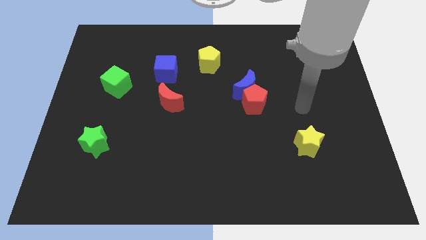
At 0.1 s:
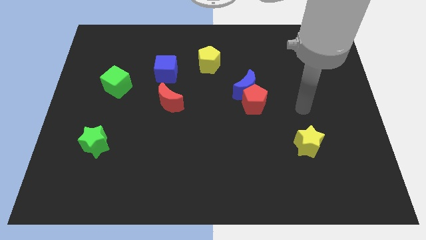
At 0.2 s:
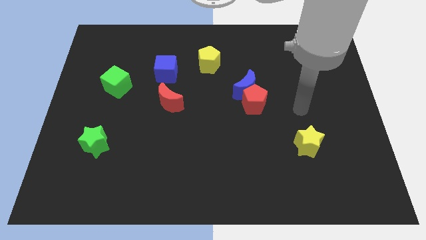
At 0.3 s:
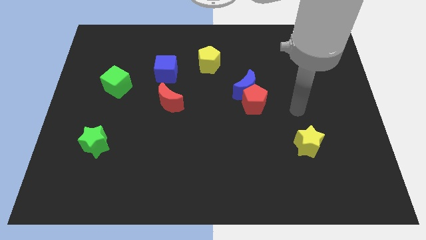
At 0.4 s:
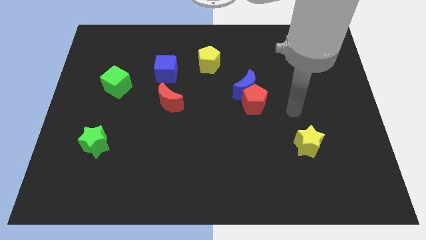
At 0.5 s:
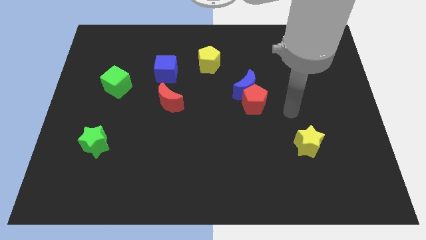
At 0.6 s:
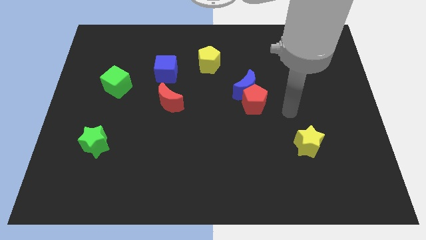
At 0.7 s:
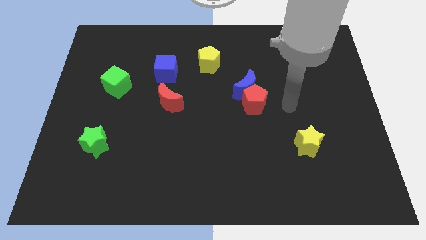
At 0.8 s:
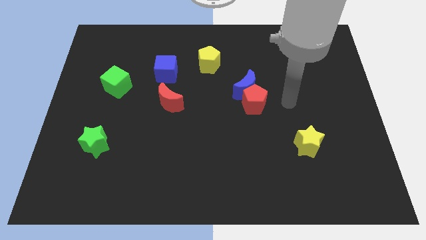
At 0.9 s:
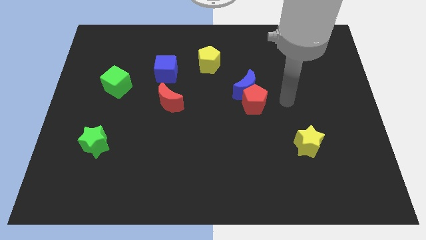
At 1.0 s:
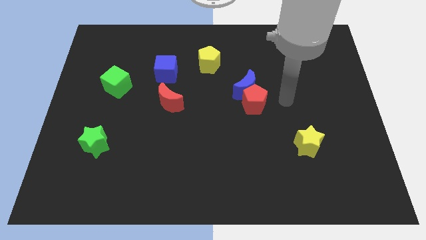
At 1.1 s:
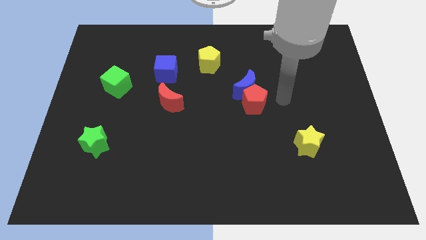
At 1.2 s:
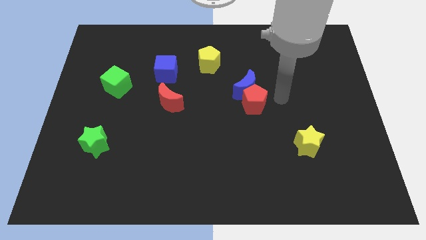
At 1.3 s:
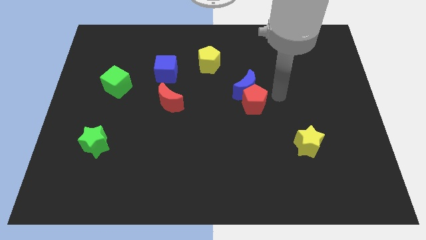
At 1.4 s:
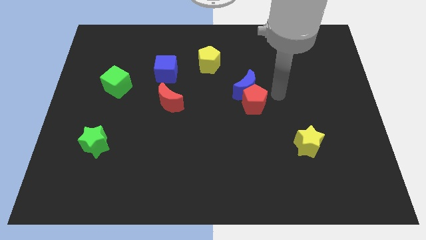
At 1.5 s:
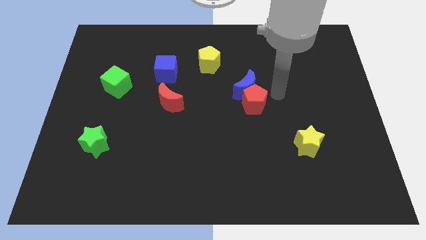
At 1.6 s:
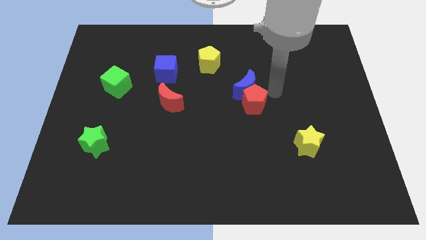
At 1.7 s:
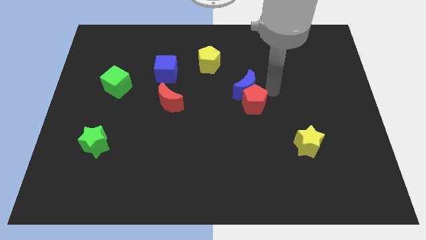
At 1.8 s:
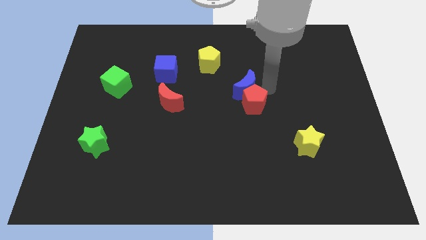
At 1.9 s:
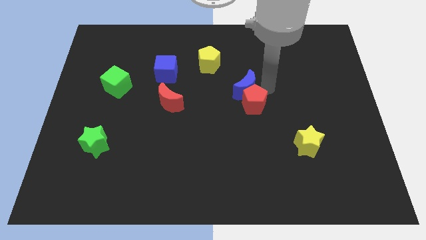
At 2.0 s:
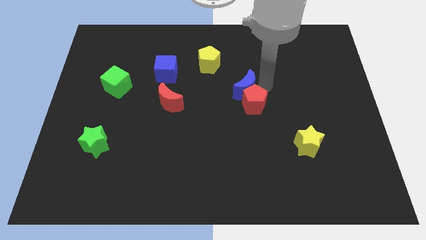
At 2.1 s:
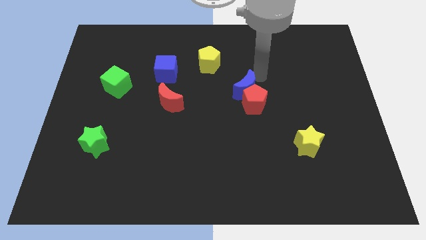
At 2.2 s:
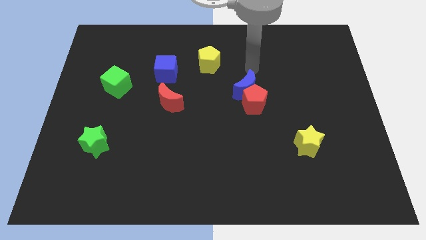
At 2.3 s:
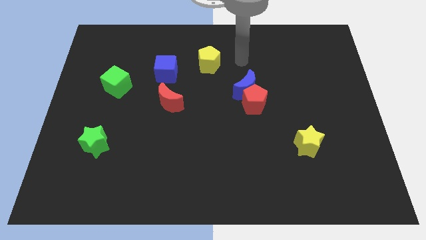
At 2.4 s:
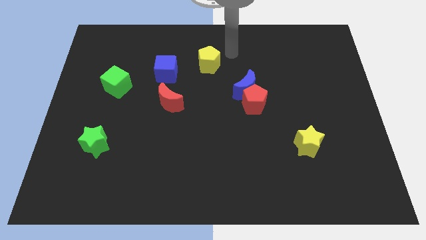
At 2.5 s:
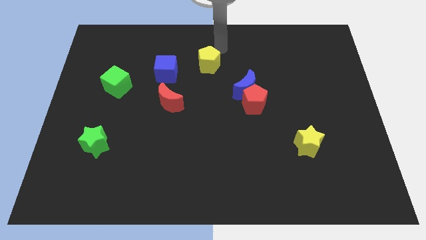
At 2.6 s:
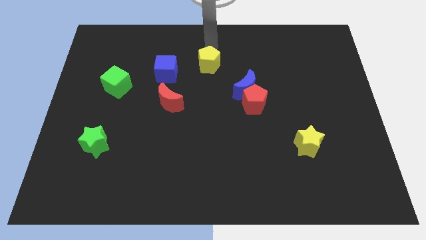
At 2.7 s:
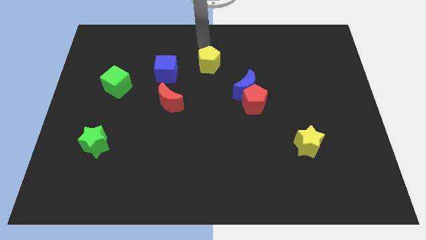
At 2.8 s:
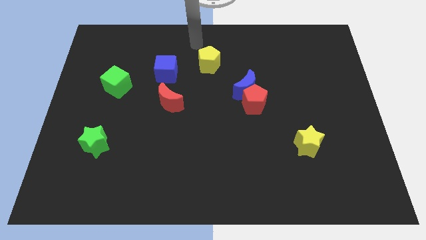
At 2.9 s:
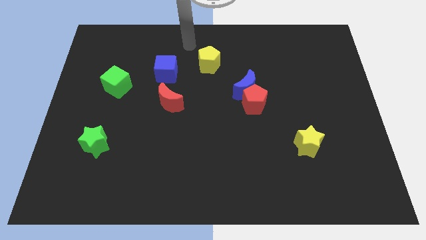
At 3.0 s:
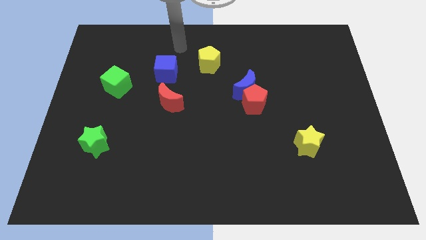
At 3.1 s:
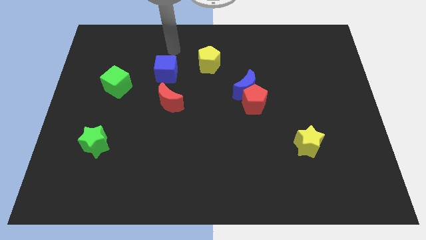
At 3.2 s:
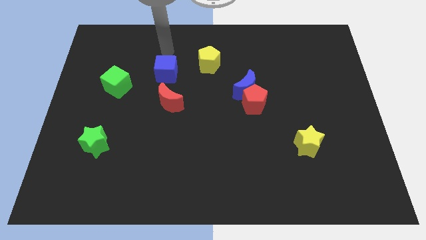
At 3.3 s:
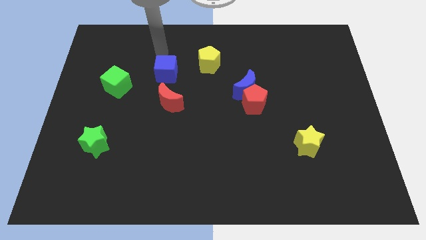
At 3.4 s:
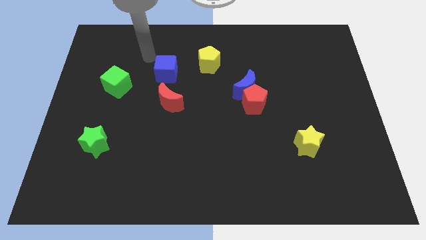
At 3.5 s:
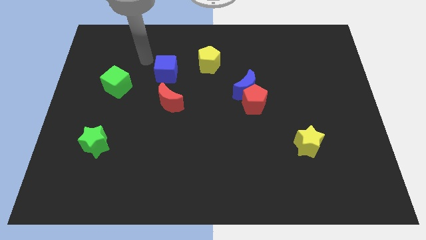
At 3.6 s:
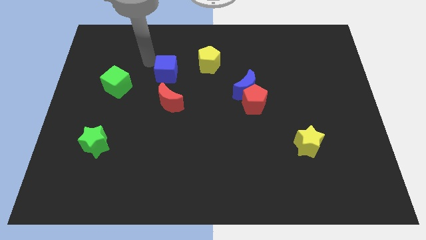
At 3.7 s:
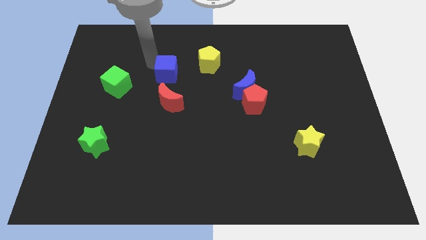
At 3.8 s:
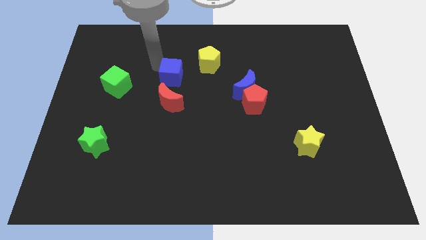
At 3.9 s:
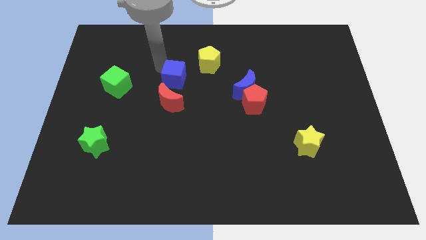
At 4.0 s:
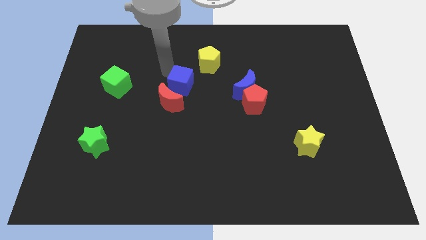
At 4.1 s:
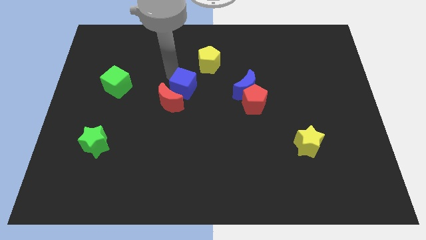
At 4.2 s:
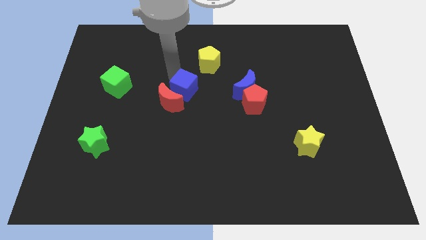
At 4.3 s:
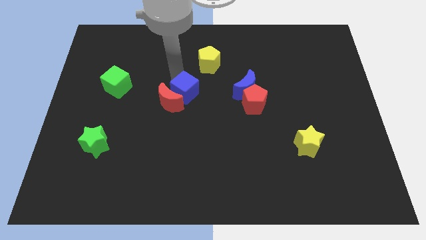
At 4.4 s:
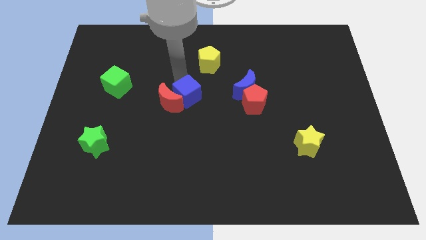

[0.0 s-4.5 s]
move the blue cube to the right of the red crescent

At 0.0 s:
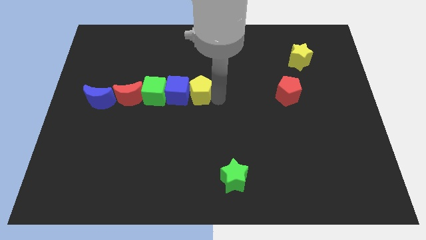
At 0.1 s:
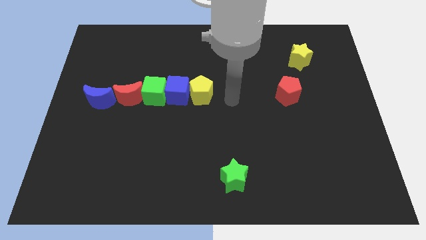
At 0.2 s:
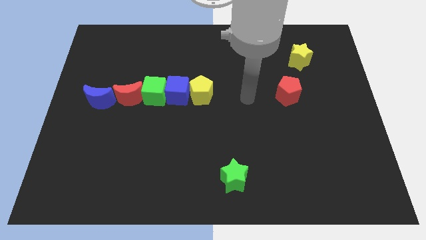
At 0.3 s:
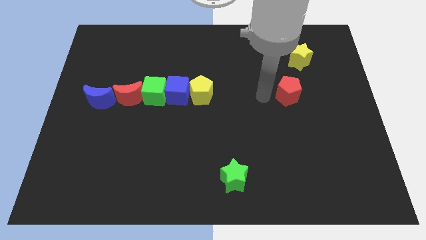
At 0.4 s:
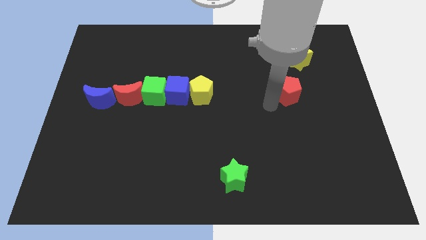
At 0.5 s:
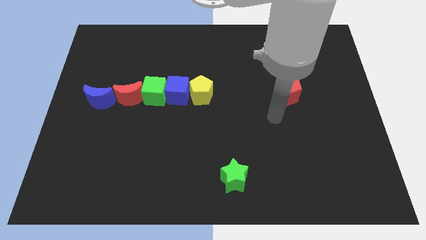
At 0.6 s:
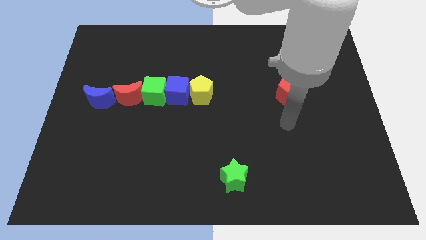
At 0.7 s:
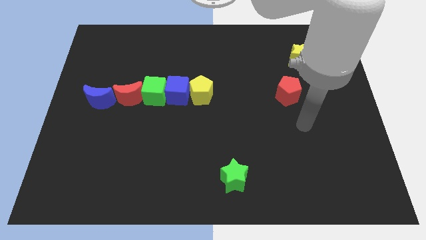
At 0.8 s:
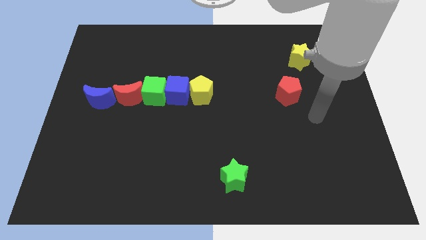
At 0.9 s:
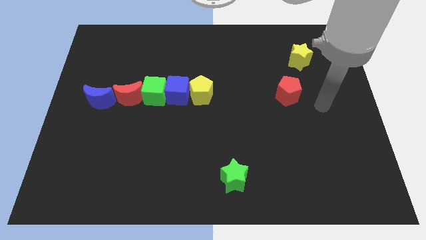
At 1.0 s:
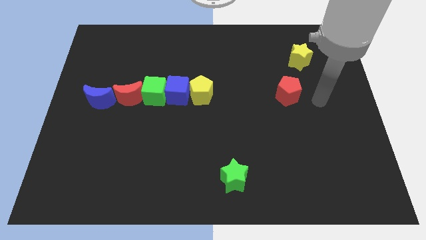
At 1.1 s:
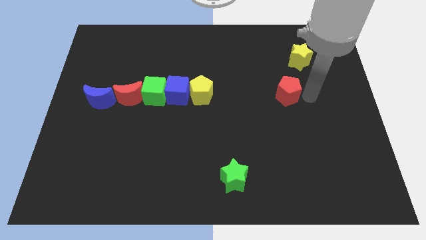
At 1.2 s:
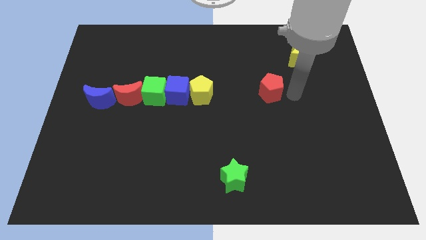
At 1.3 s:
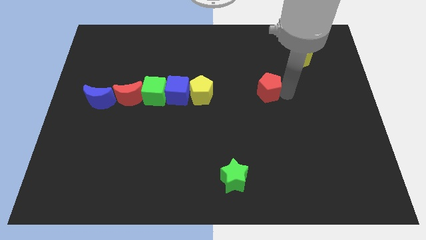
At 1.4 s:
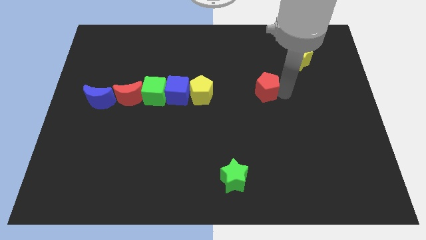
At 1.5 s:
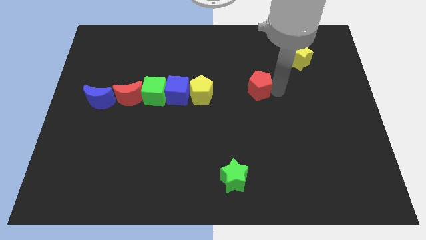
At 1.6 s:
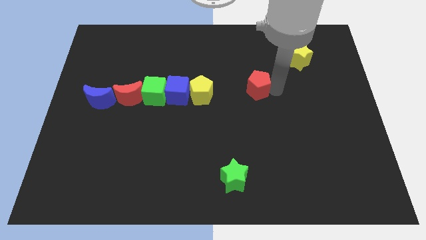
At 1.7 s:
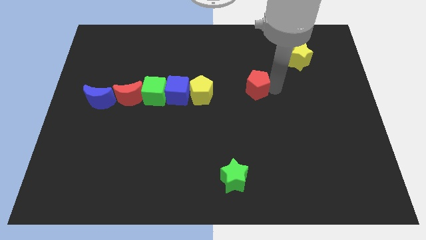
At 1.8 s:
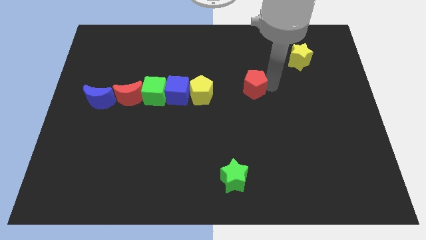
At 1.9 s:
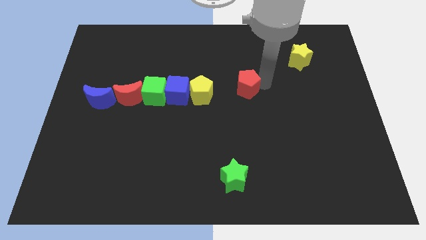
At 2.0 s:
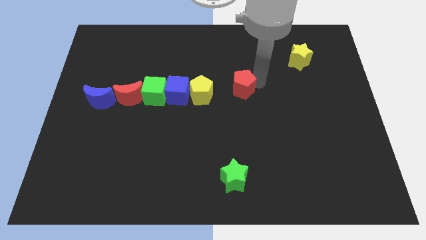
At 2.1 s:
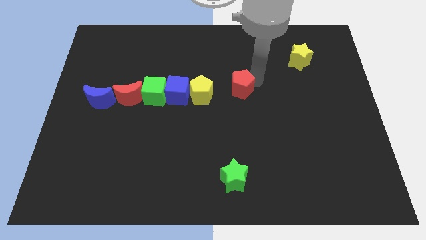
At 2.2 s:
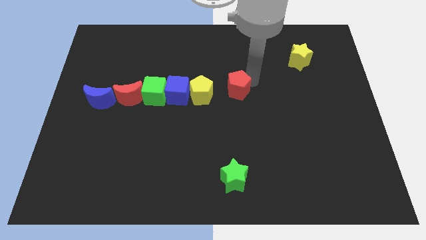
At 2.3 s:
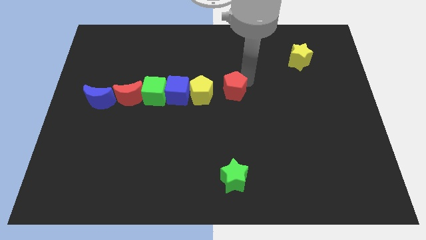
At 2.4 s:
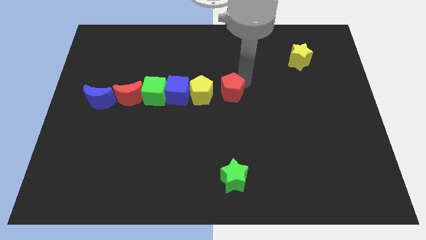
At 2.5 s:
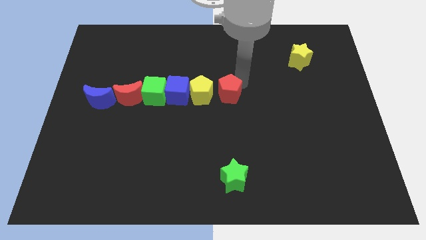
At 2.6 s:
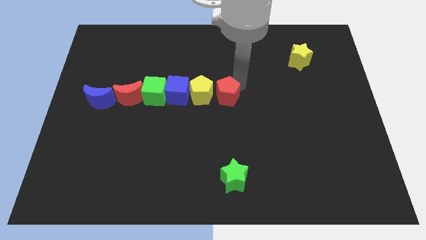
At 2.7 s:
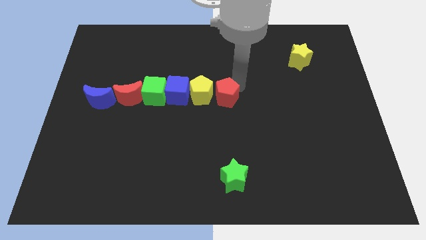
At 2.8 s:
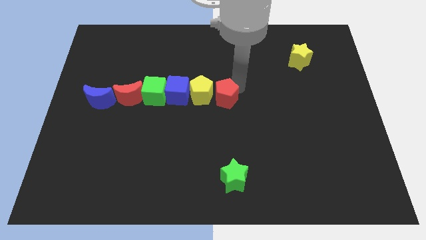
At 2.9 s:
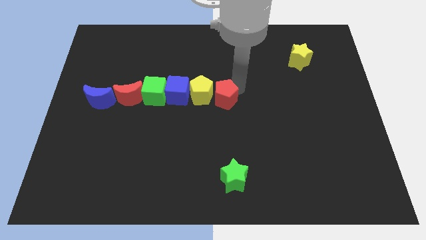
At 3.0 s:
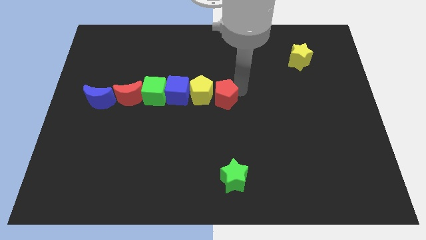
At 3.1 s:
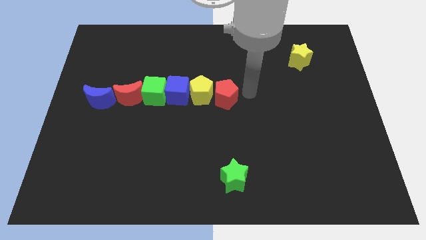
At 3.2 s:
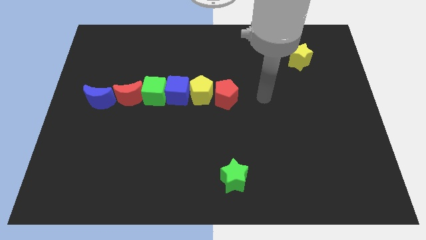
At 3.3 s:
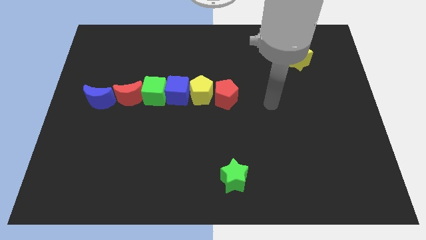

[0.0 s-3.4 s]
place the red pentagon above the green star

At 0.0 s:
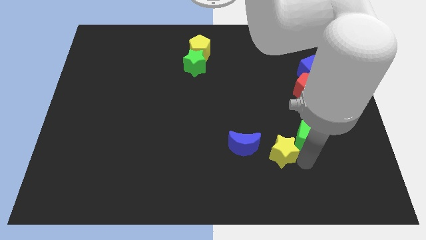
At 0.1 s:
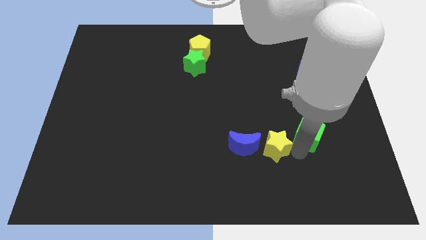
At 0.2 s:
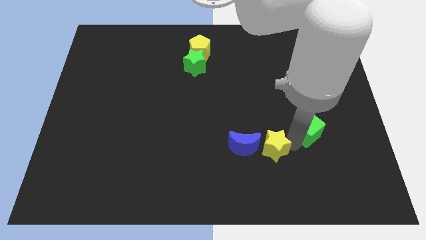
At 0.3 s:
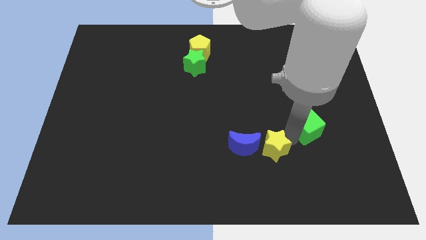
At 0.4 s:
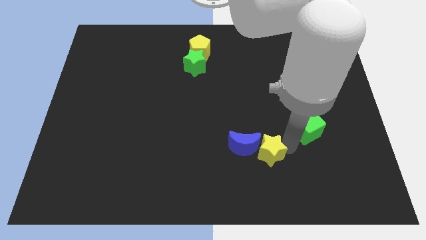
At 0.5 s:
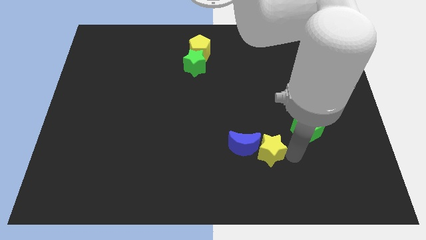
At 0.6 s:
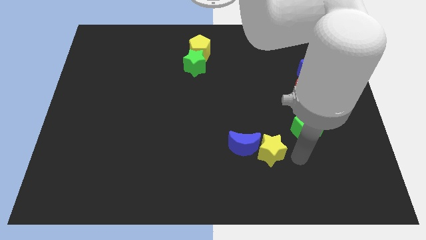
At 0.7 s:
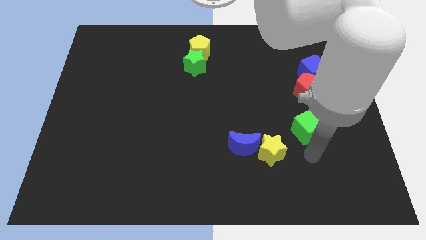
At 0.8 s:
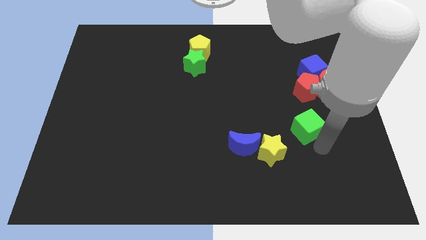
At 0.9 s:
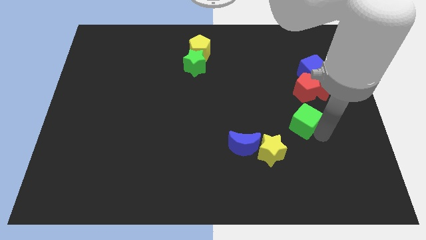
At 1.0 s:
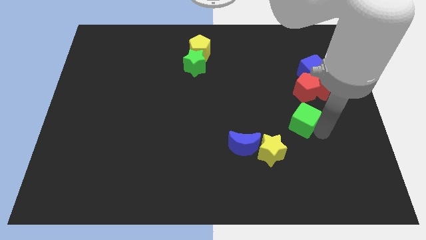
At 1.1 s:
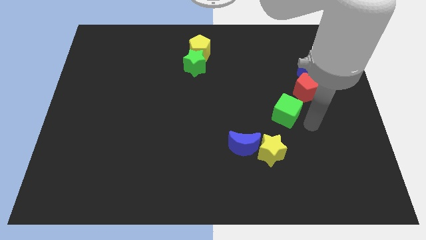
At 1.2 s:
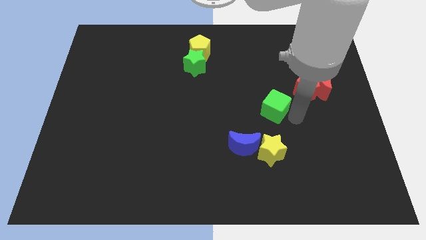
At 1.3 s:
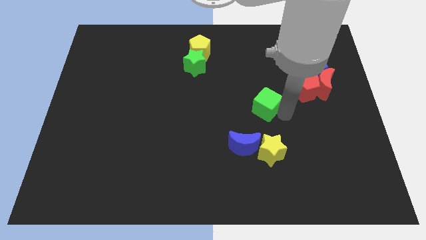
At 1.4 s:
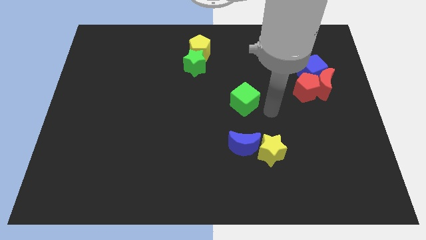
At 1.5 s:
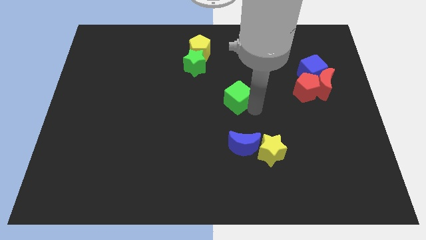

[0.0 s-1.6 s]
place the green cube above the blue moon
